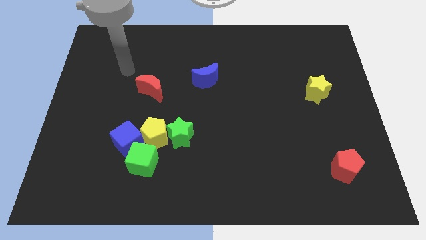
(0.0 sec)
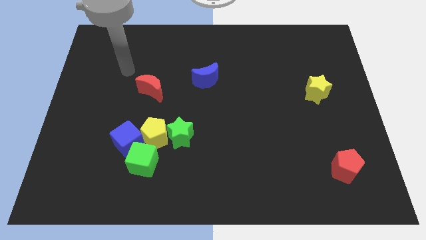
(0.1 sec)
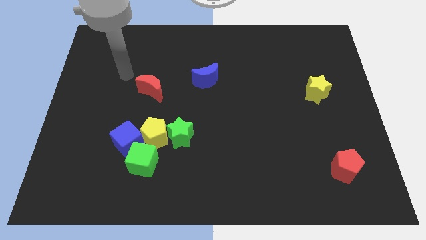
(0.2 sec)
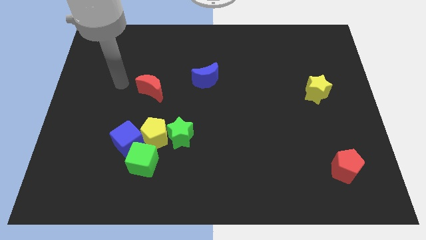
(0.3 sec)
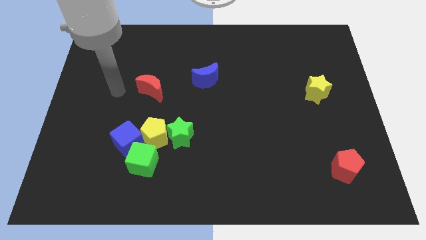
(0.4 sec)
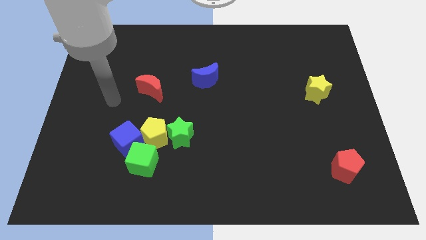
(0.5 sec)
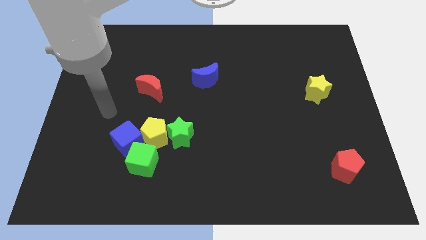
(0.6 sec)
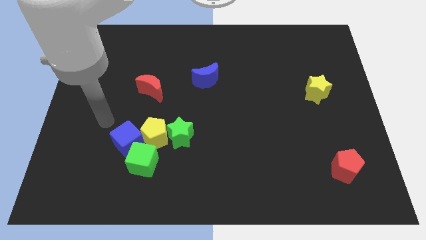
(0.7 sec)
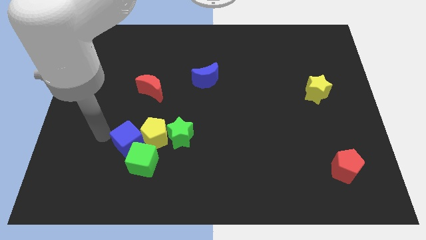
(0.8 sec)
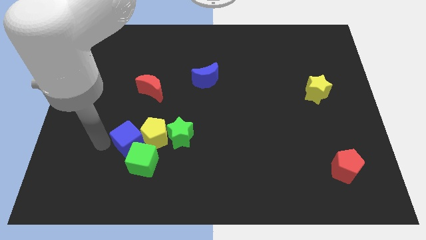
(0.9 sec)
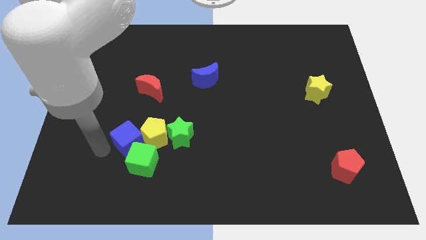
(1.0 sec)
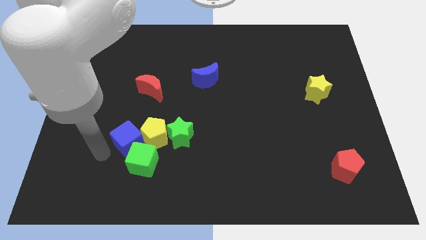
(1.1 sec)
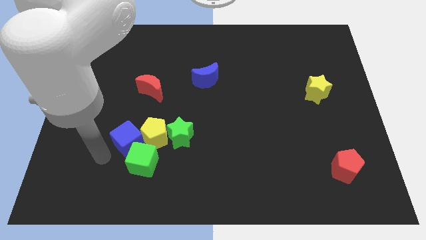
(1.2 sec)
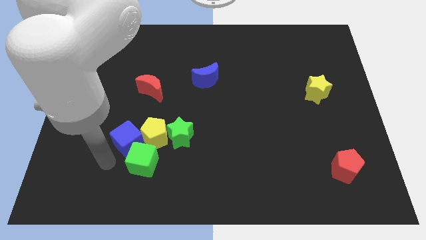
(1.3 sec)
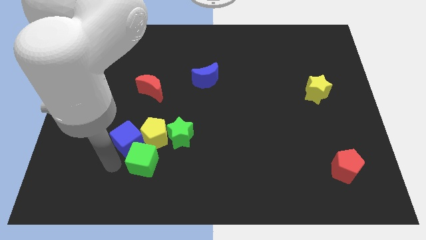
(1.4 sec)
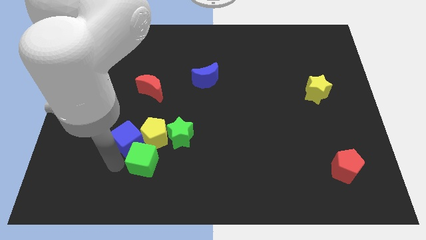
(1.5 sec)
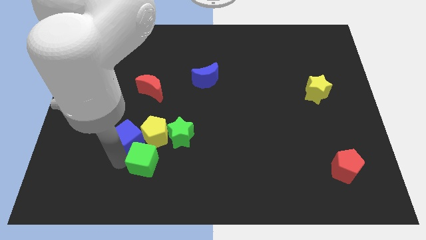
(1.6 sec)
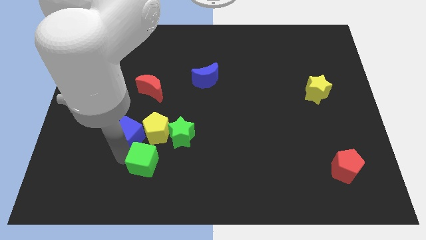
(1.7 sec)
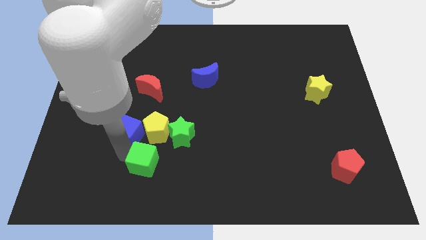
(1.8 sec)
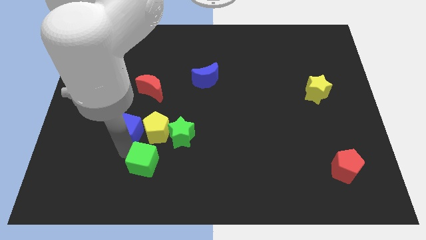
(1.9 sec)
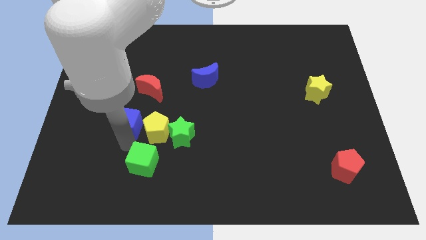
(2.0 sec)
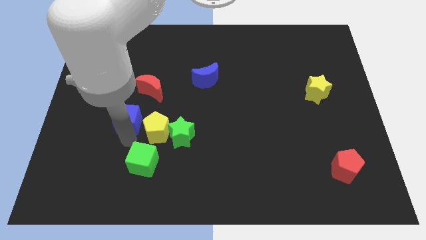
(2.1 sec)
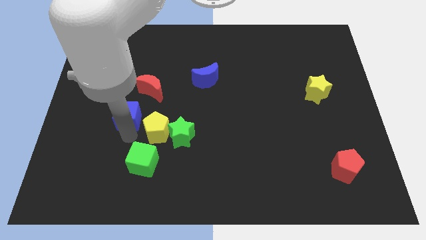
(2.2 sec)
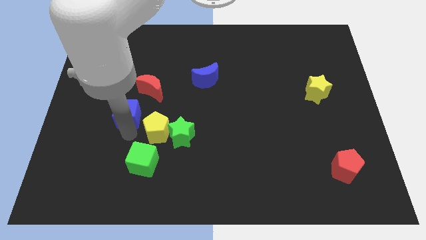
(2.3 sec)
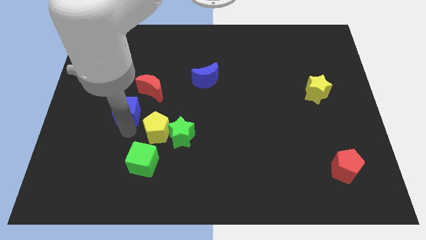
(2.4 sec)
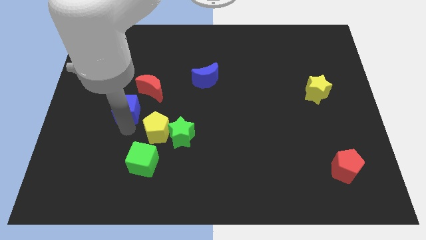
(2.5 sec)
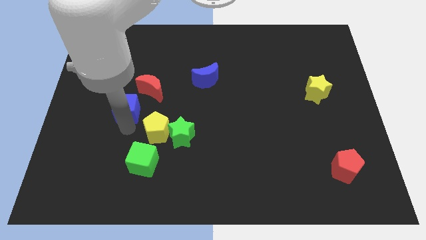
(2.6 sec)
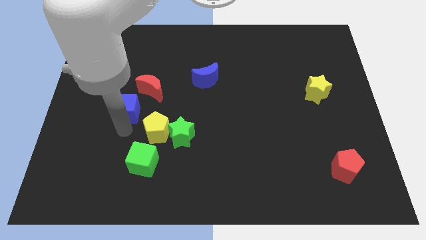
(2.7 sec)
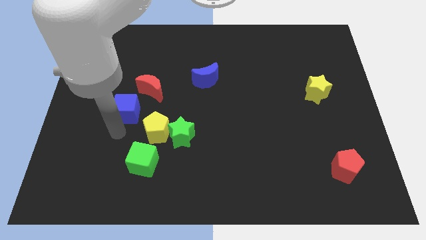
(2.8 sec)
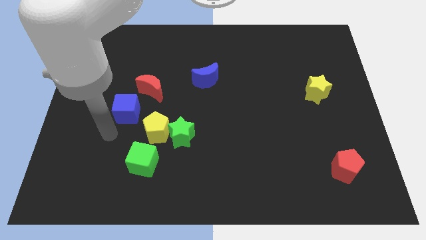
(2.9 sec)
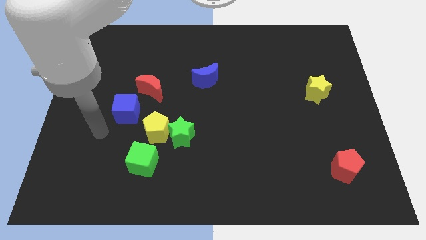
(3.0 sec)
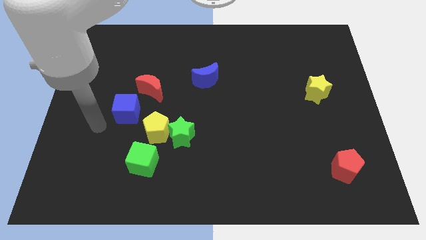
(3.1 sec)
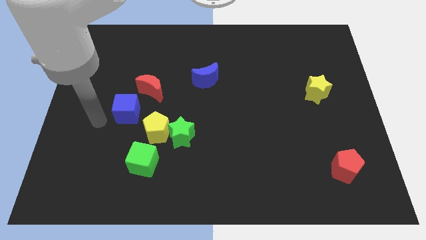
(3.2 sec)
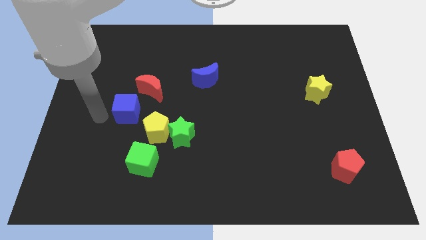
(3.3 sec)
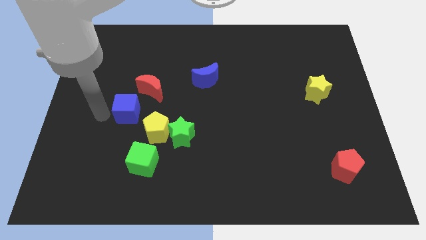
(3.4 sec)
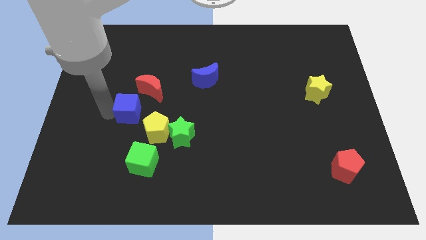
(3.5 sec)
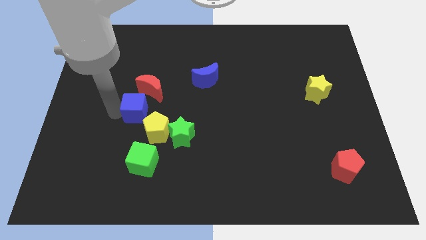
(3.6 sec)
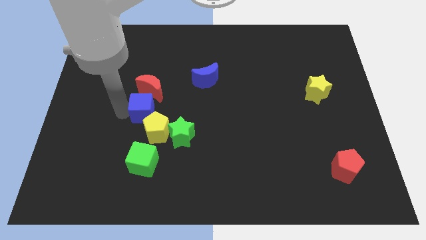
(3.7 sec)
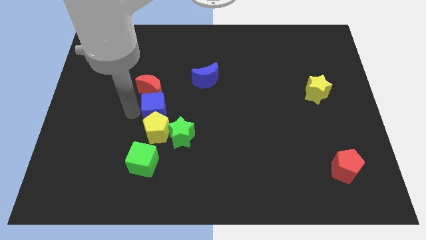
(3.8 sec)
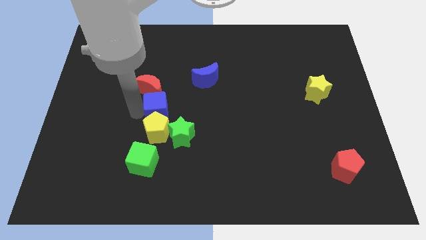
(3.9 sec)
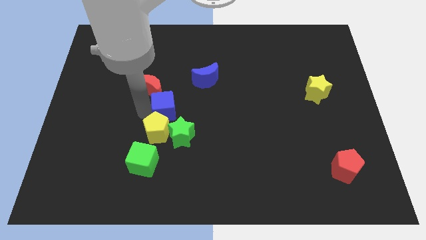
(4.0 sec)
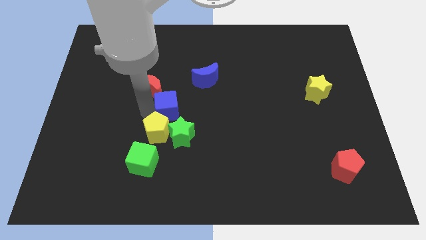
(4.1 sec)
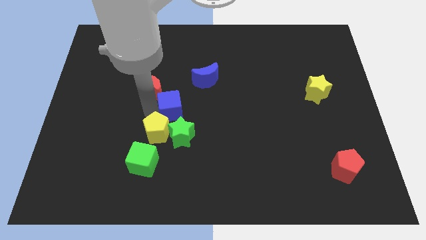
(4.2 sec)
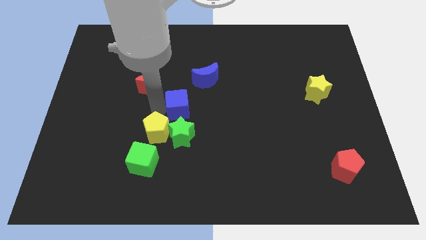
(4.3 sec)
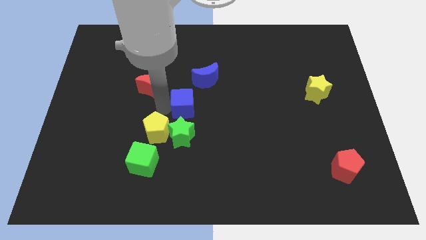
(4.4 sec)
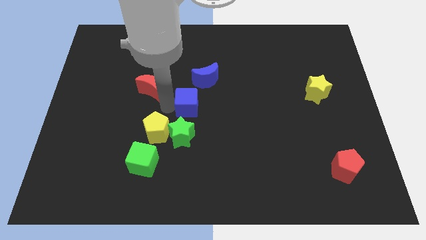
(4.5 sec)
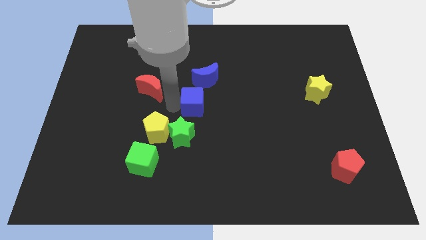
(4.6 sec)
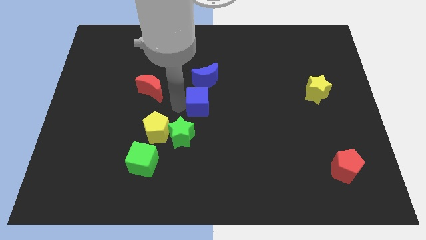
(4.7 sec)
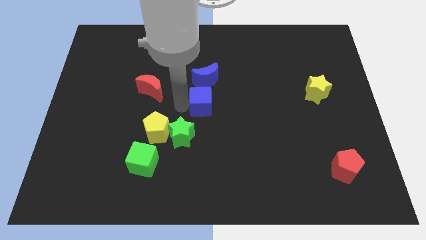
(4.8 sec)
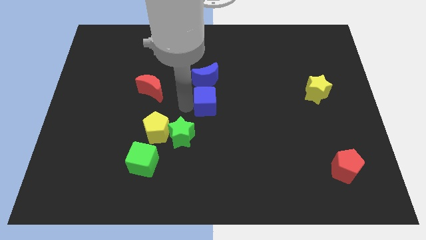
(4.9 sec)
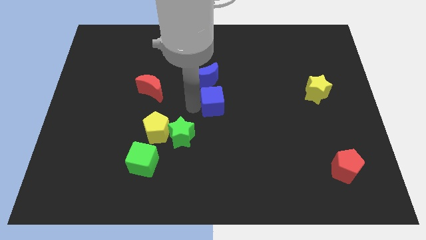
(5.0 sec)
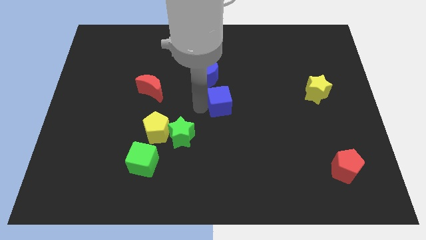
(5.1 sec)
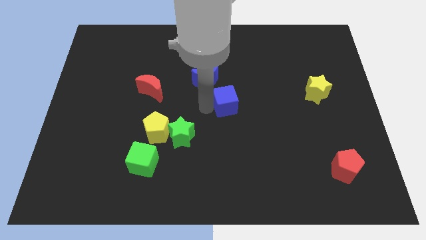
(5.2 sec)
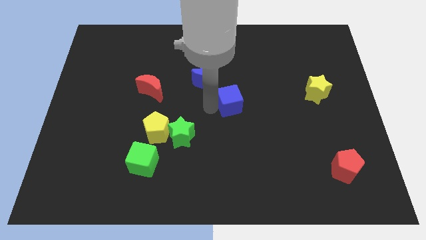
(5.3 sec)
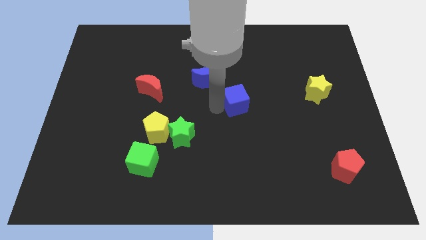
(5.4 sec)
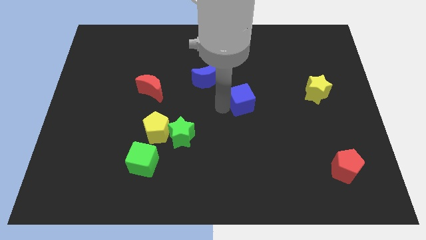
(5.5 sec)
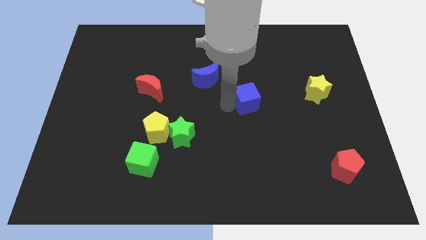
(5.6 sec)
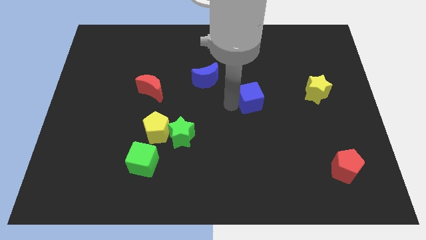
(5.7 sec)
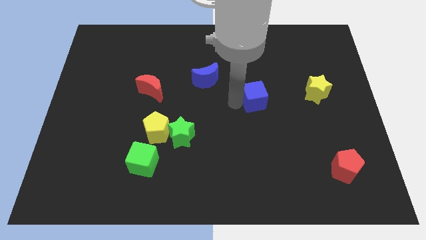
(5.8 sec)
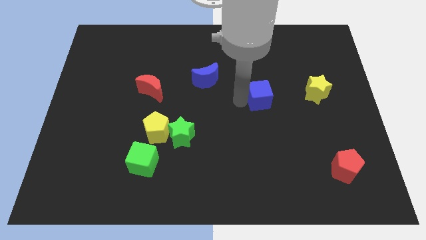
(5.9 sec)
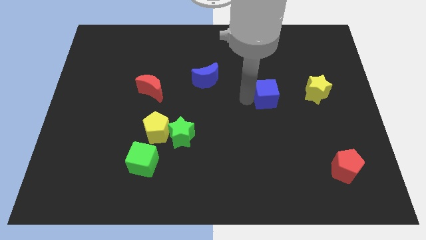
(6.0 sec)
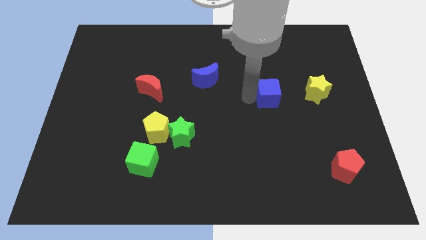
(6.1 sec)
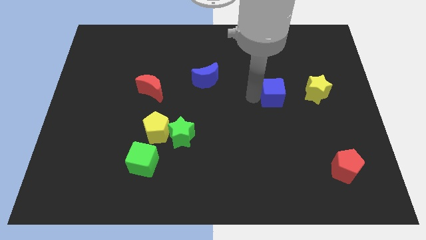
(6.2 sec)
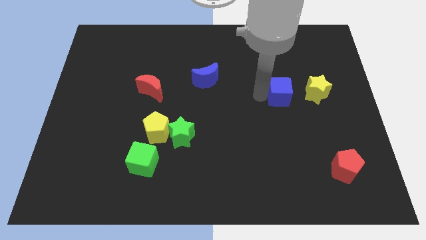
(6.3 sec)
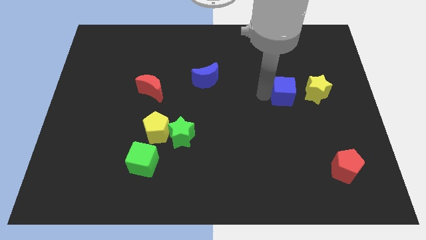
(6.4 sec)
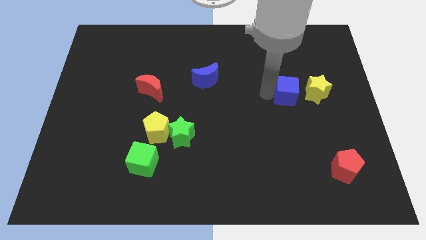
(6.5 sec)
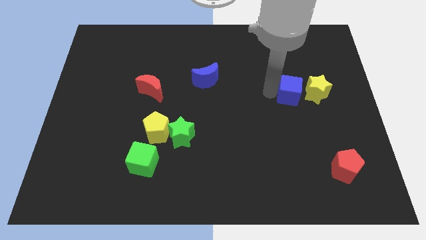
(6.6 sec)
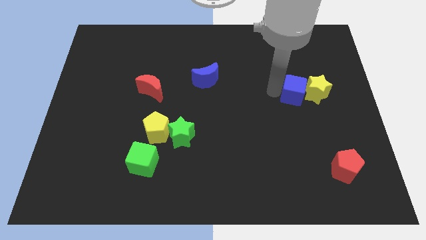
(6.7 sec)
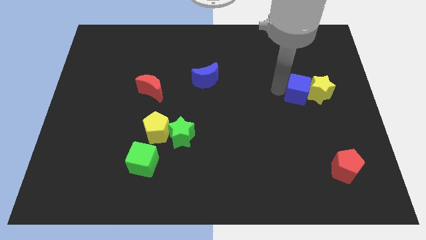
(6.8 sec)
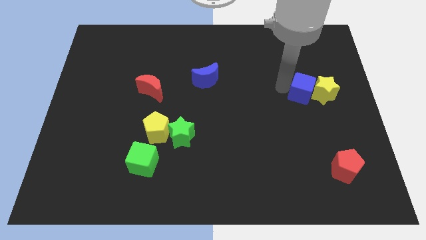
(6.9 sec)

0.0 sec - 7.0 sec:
put the blue cube towards the yellow star

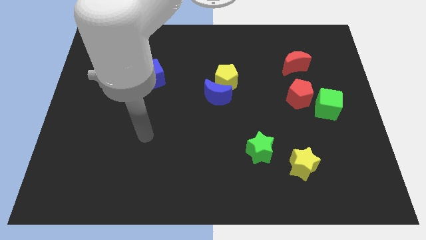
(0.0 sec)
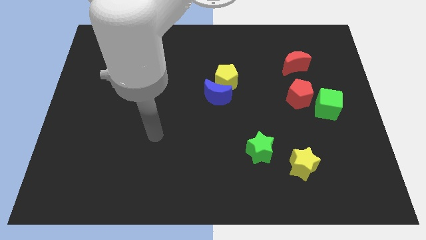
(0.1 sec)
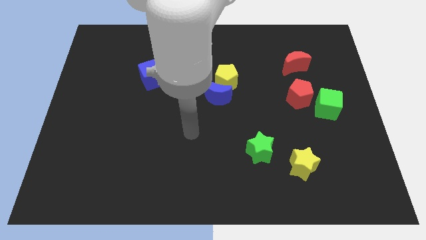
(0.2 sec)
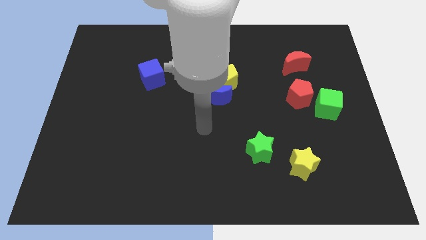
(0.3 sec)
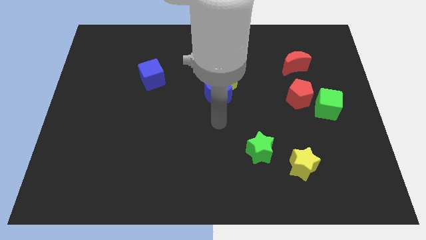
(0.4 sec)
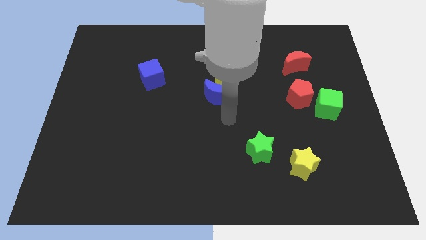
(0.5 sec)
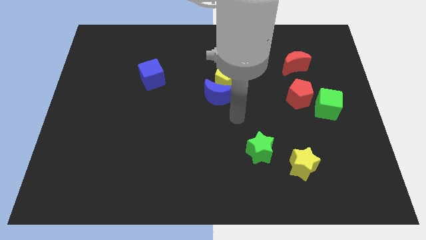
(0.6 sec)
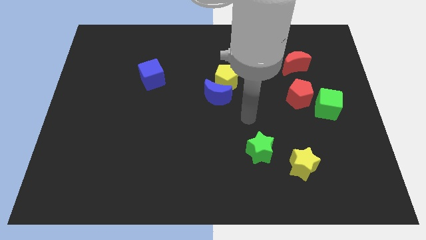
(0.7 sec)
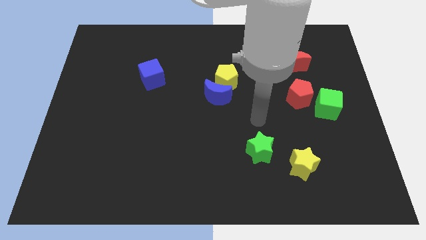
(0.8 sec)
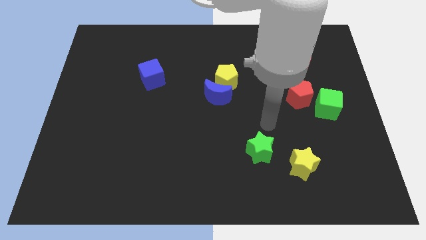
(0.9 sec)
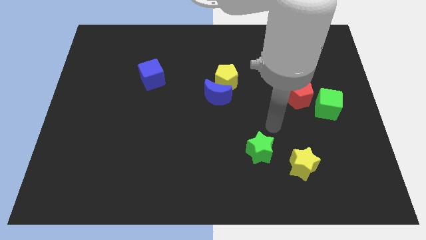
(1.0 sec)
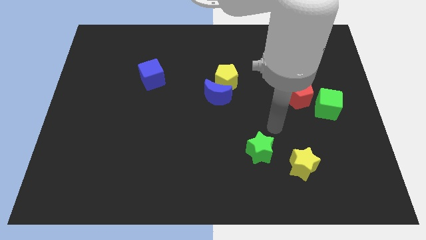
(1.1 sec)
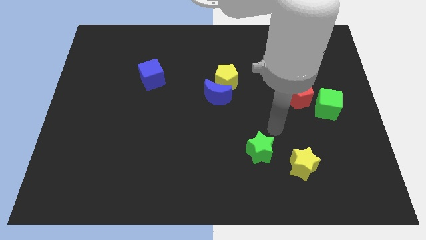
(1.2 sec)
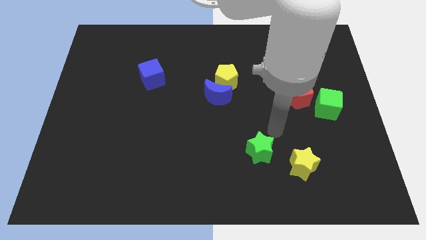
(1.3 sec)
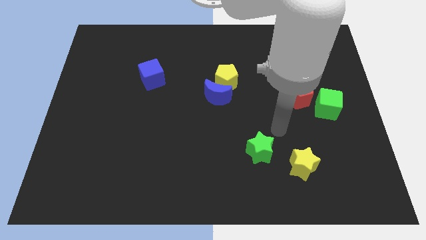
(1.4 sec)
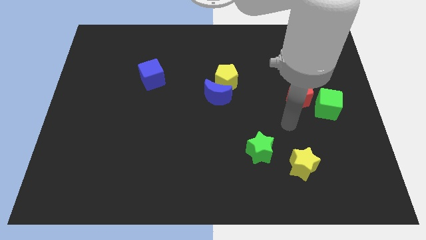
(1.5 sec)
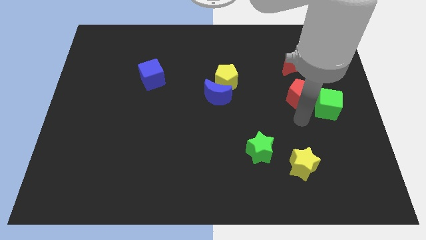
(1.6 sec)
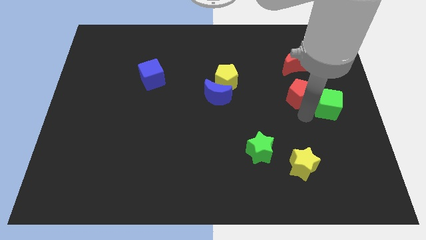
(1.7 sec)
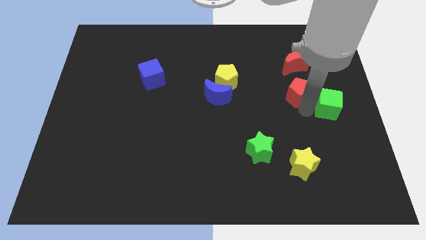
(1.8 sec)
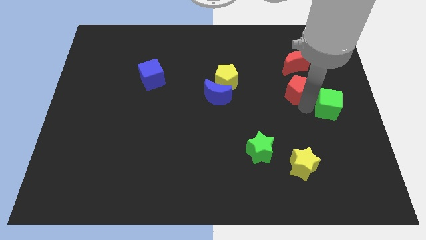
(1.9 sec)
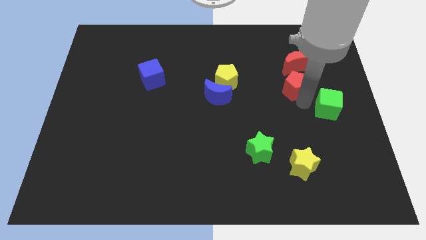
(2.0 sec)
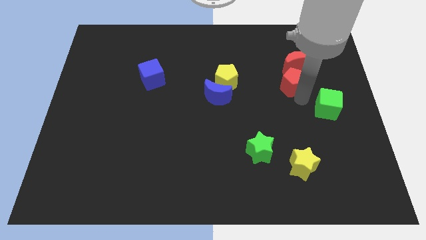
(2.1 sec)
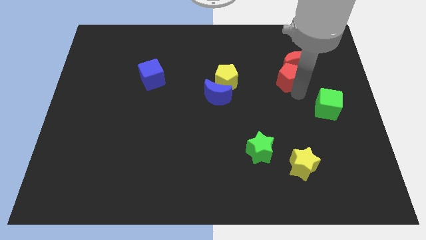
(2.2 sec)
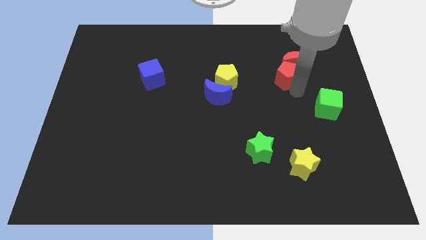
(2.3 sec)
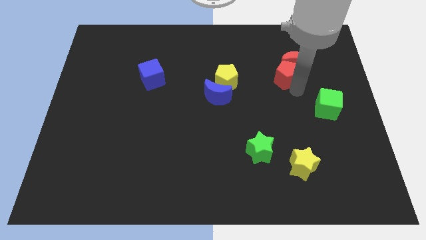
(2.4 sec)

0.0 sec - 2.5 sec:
move the red pentagon next to the red moon
